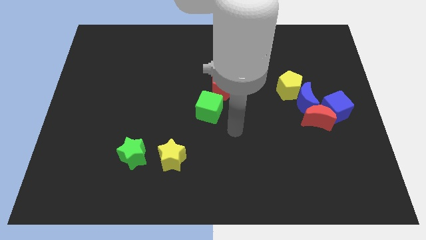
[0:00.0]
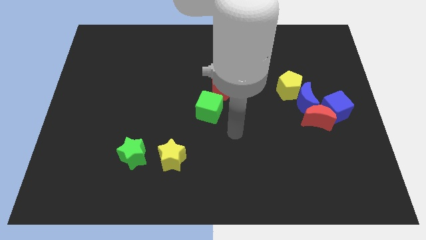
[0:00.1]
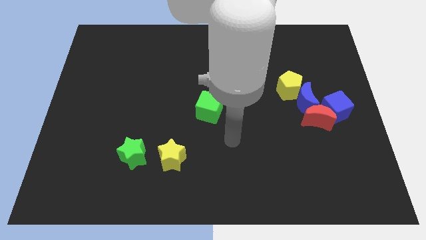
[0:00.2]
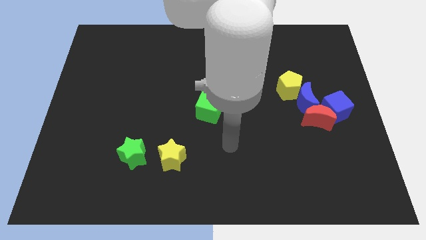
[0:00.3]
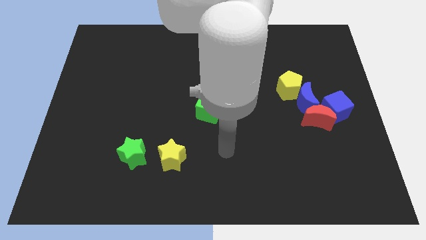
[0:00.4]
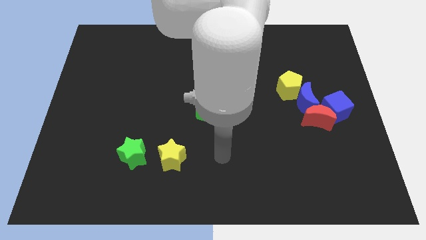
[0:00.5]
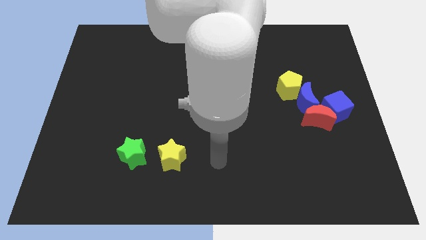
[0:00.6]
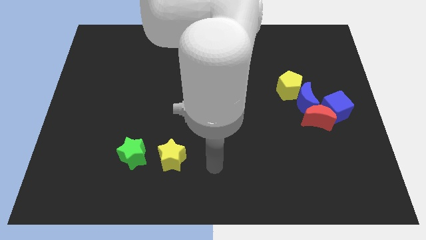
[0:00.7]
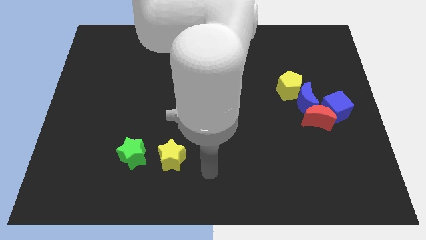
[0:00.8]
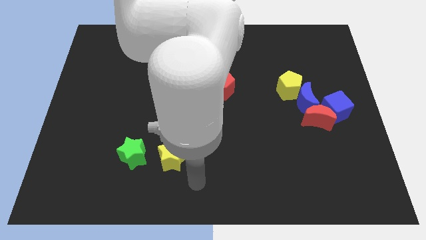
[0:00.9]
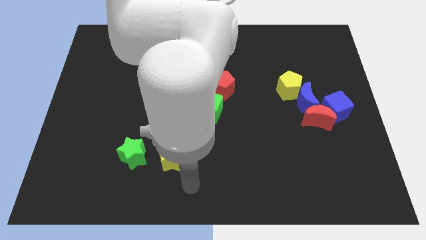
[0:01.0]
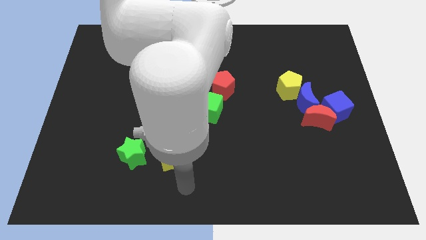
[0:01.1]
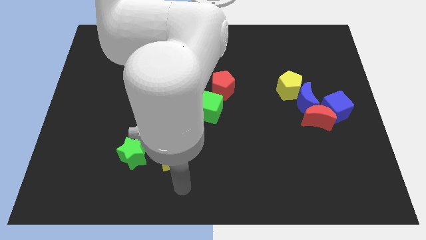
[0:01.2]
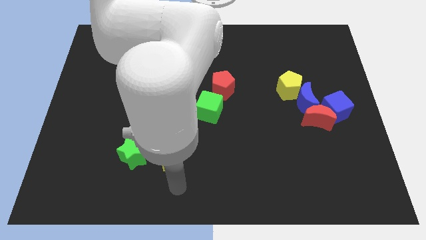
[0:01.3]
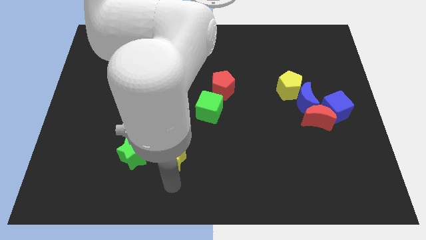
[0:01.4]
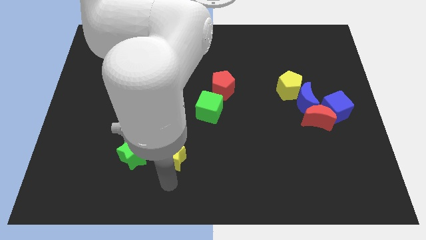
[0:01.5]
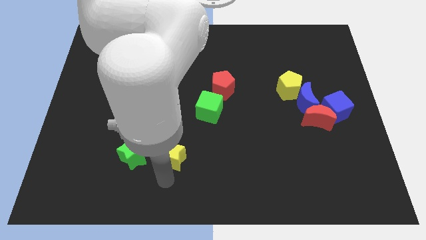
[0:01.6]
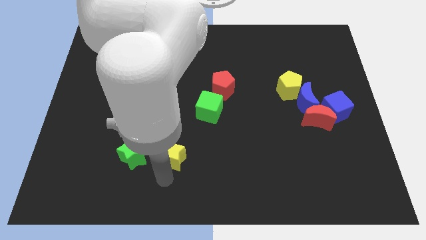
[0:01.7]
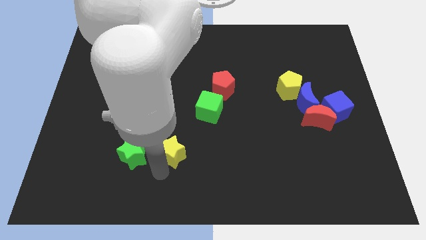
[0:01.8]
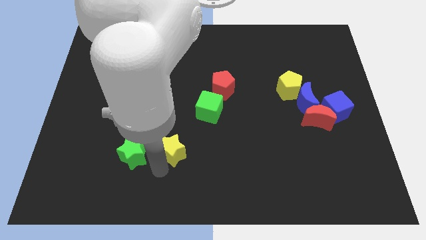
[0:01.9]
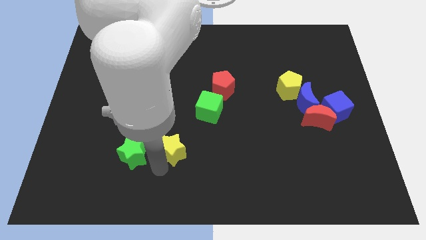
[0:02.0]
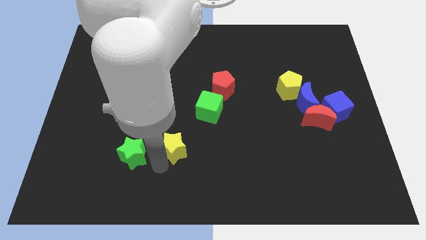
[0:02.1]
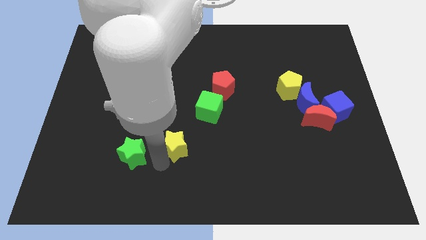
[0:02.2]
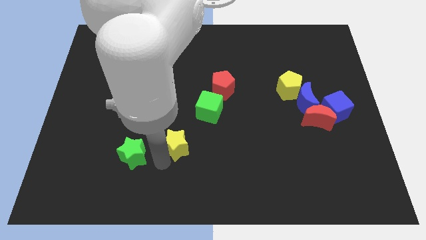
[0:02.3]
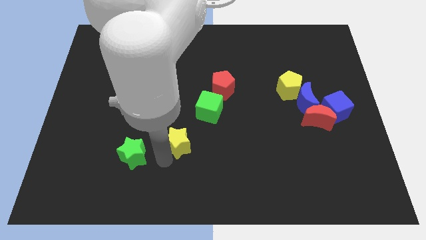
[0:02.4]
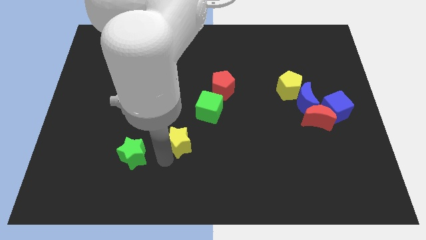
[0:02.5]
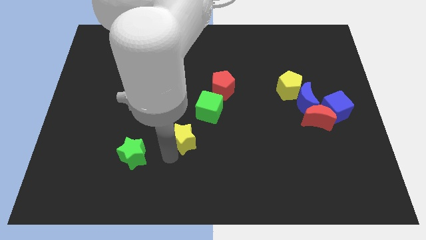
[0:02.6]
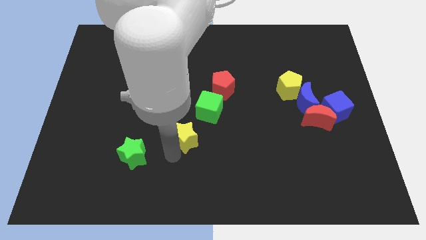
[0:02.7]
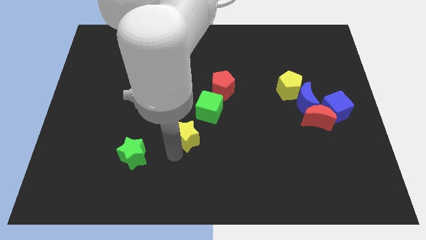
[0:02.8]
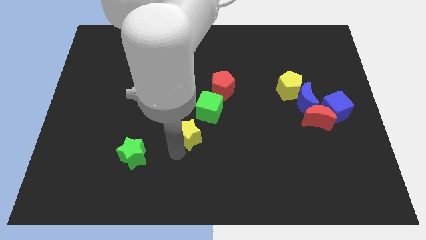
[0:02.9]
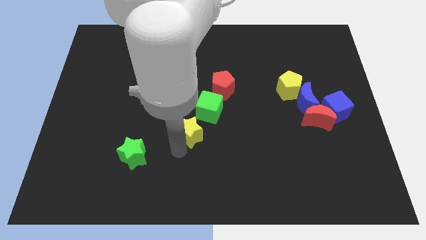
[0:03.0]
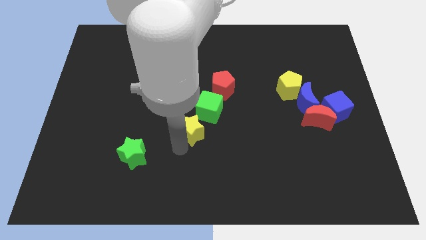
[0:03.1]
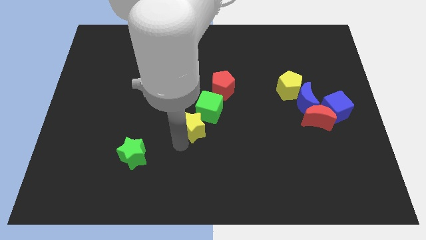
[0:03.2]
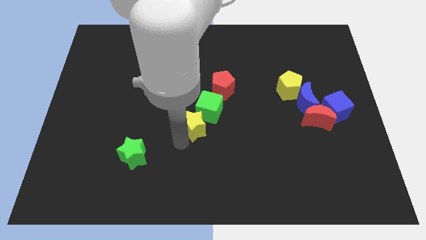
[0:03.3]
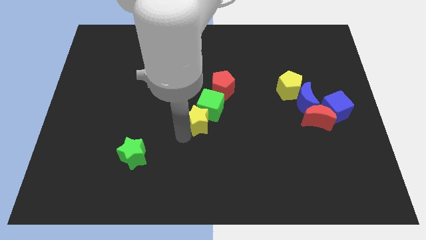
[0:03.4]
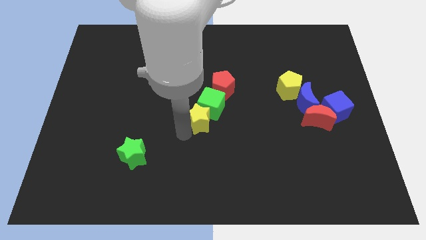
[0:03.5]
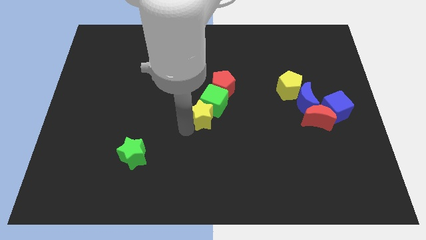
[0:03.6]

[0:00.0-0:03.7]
push the yellow star next to the green cube

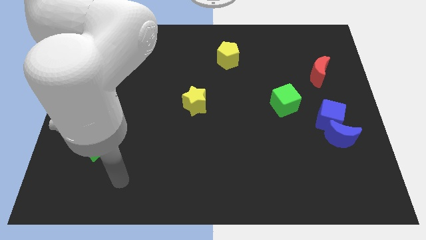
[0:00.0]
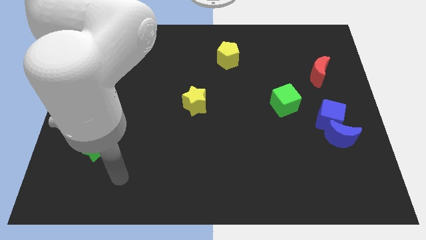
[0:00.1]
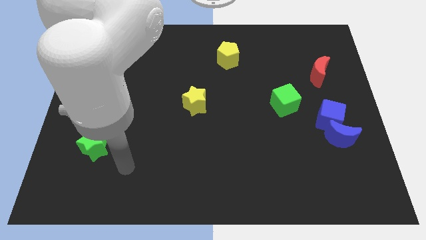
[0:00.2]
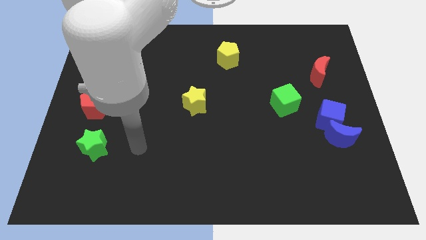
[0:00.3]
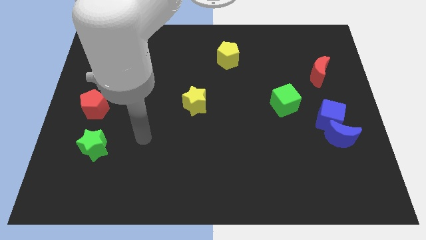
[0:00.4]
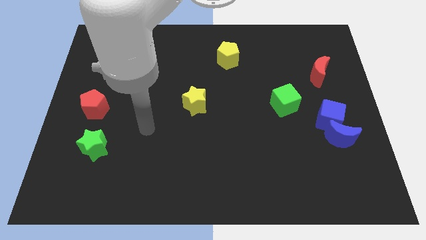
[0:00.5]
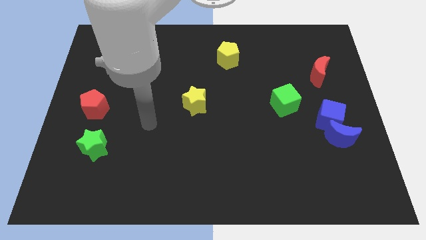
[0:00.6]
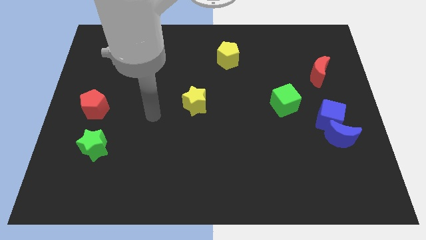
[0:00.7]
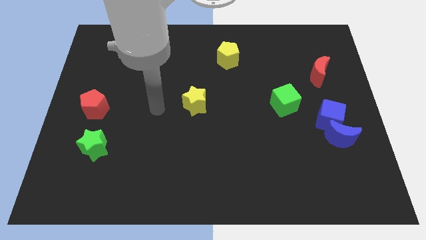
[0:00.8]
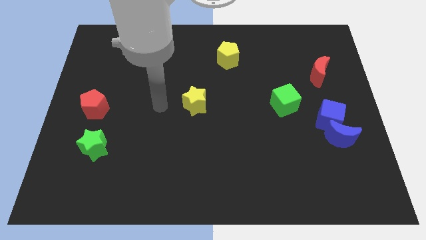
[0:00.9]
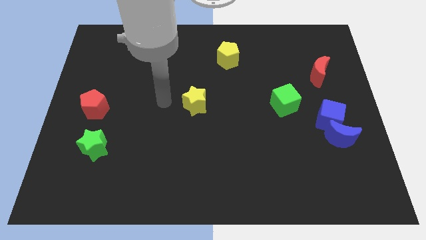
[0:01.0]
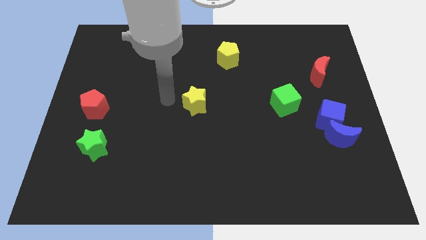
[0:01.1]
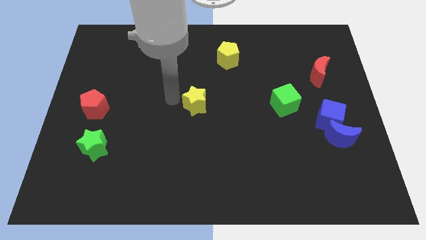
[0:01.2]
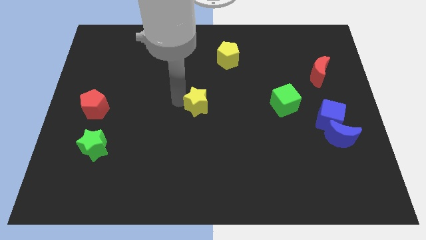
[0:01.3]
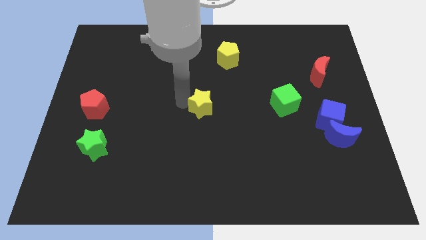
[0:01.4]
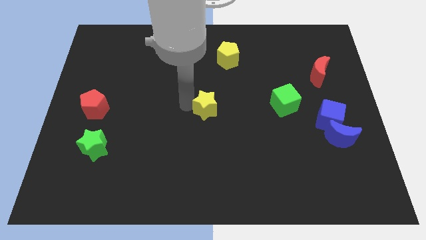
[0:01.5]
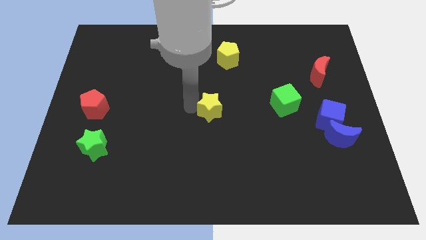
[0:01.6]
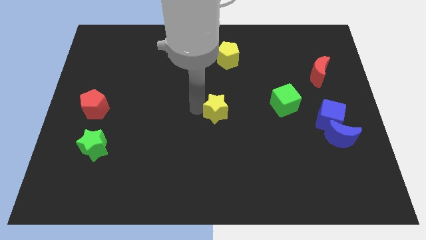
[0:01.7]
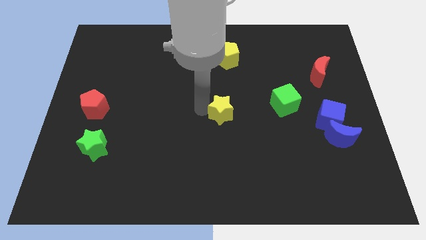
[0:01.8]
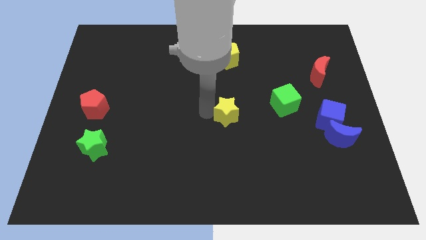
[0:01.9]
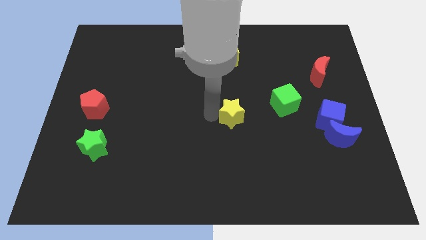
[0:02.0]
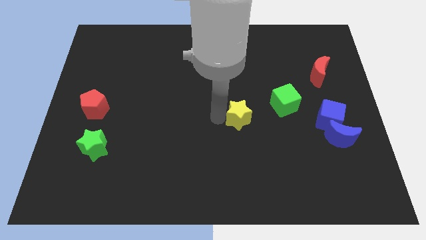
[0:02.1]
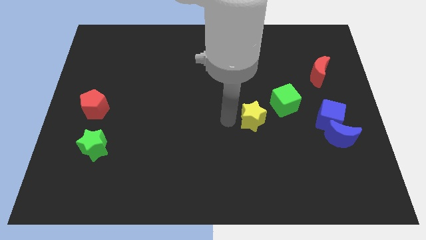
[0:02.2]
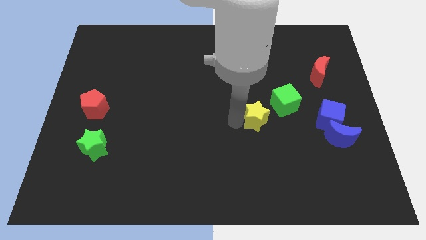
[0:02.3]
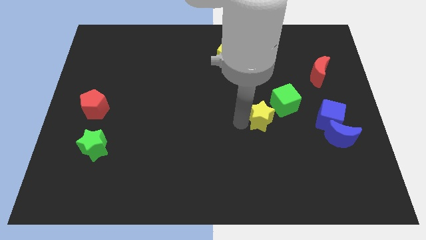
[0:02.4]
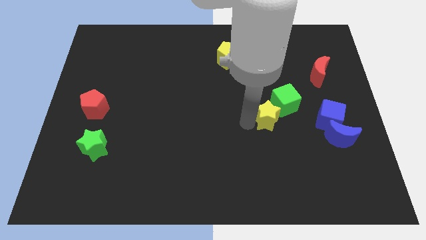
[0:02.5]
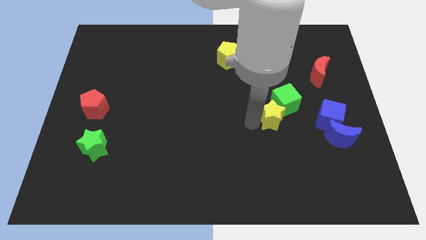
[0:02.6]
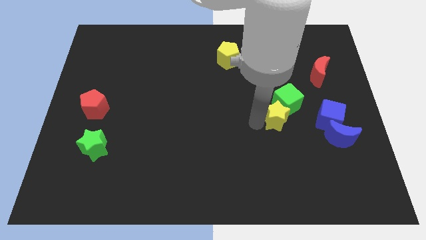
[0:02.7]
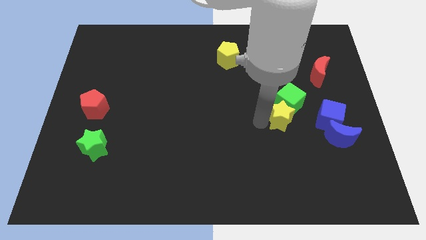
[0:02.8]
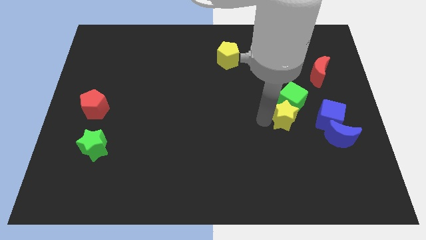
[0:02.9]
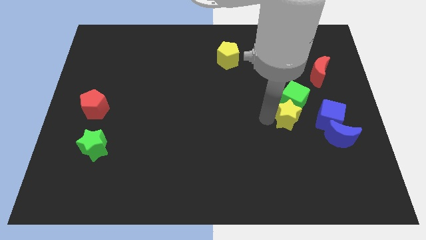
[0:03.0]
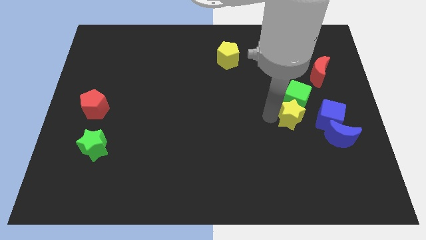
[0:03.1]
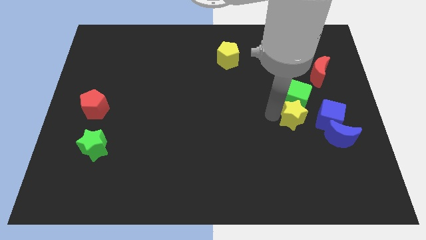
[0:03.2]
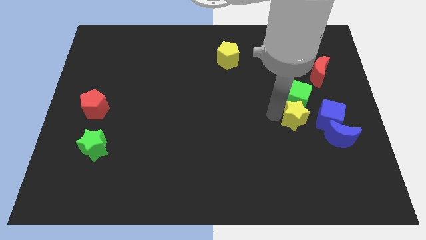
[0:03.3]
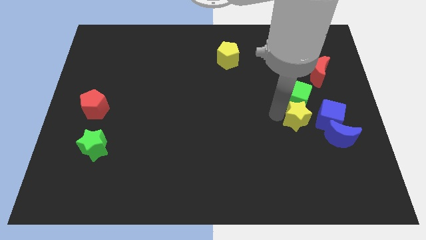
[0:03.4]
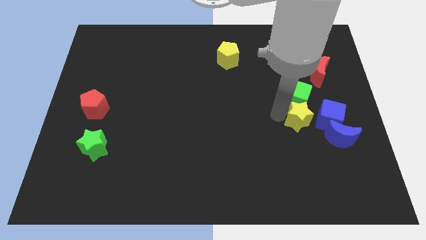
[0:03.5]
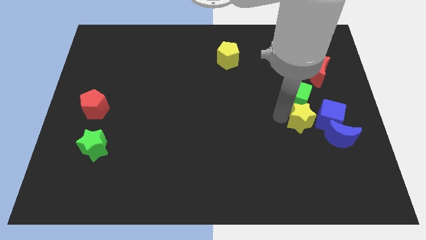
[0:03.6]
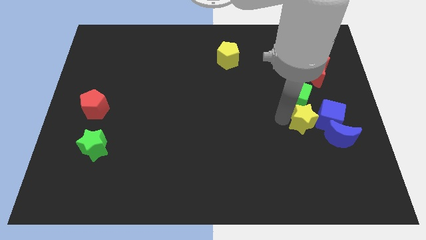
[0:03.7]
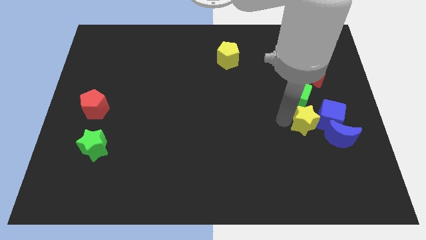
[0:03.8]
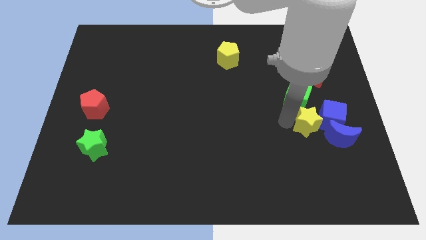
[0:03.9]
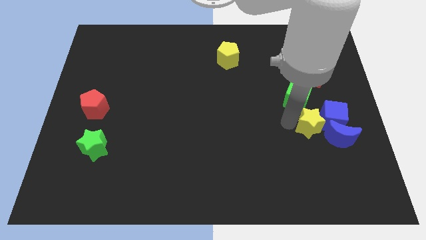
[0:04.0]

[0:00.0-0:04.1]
move the yellow star towards the blue cube
